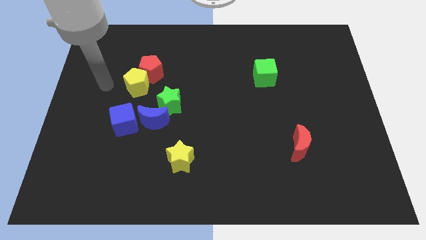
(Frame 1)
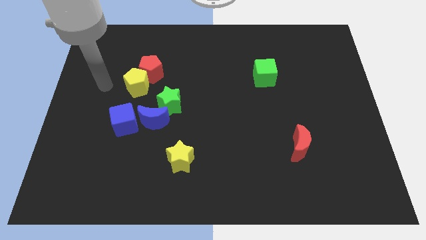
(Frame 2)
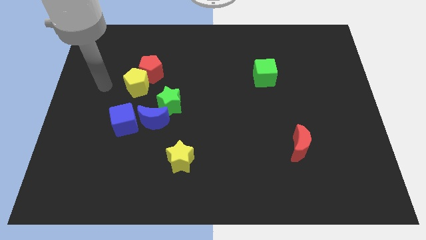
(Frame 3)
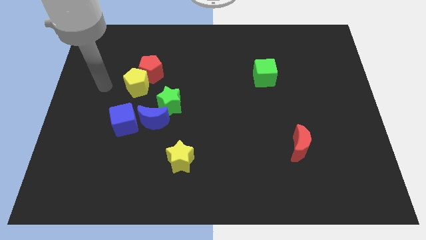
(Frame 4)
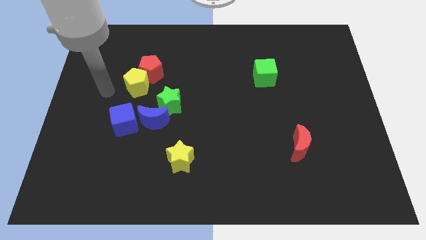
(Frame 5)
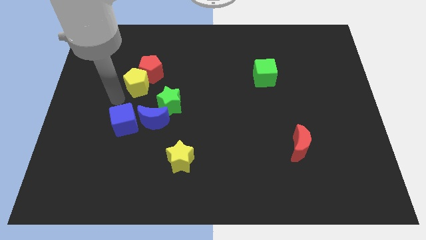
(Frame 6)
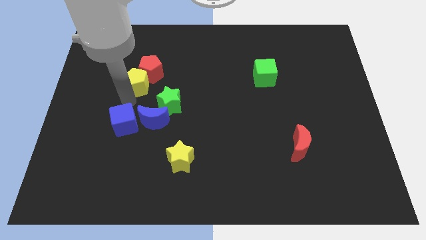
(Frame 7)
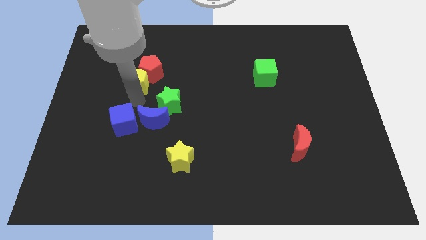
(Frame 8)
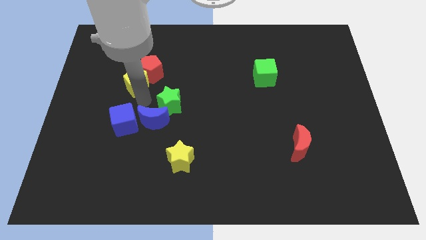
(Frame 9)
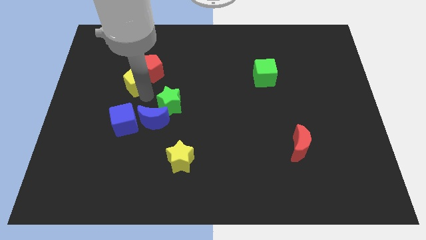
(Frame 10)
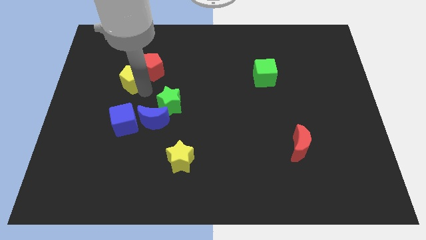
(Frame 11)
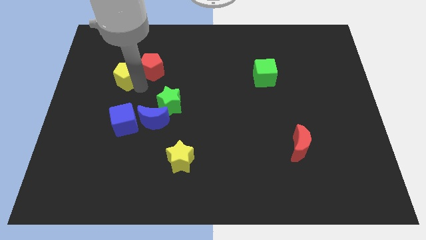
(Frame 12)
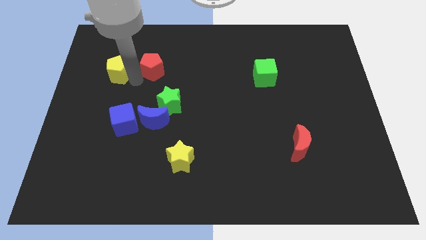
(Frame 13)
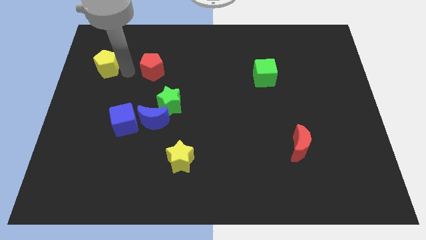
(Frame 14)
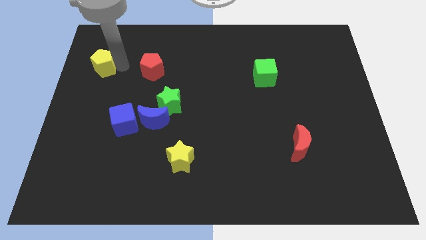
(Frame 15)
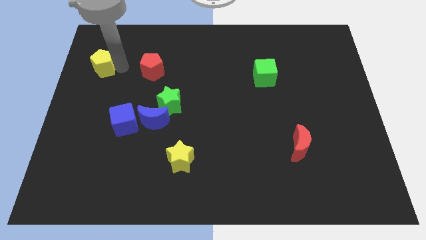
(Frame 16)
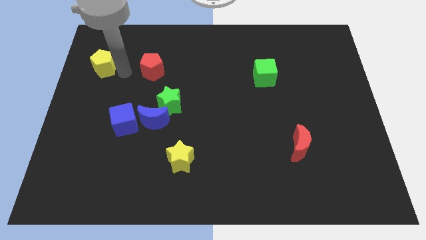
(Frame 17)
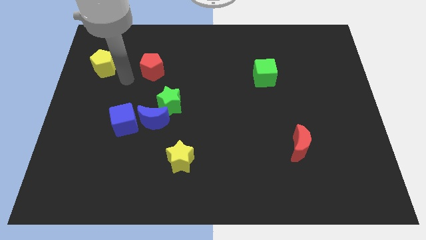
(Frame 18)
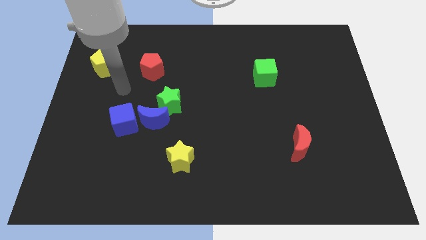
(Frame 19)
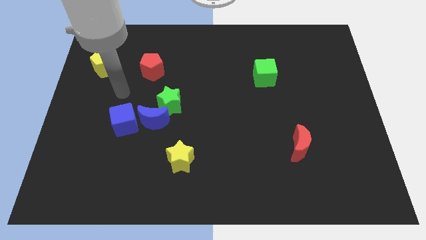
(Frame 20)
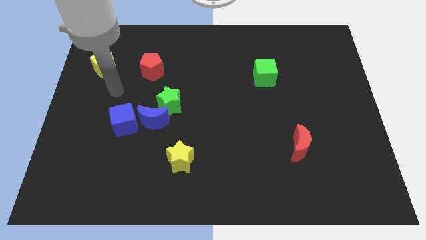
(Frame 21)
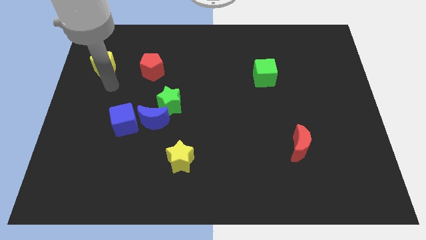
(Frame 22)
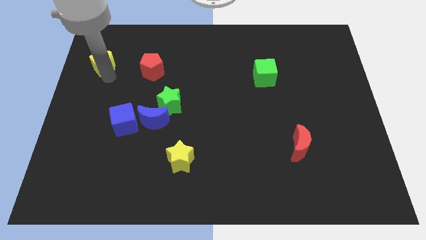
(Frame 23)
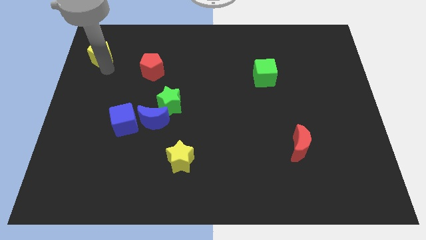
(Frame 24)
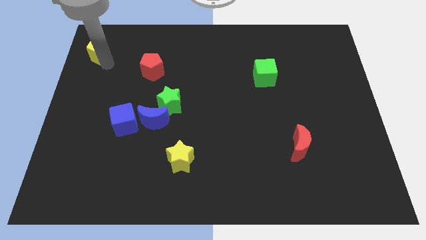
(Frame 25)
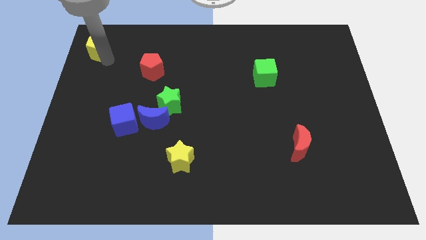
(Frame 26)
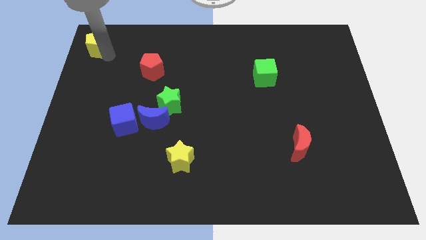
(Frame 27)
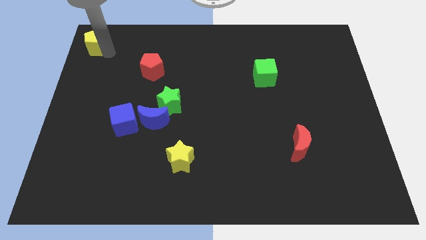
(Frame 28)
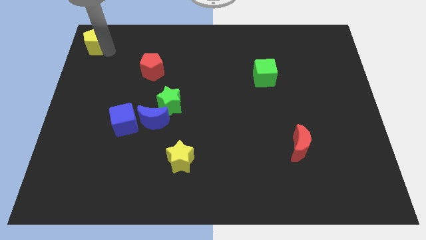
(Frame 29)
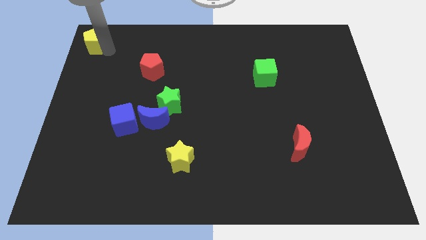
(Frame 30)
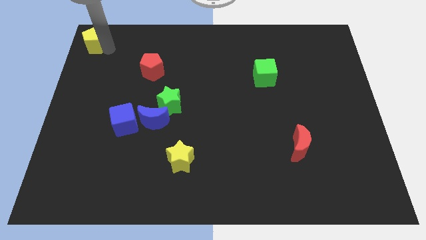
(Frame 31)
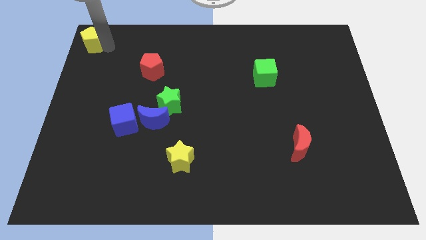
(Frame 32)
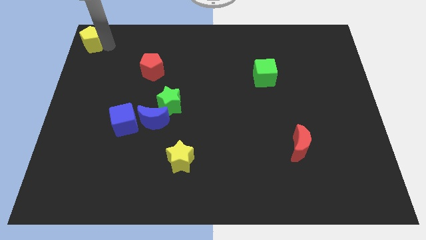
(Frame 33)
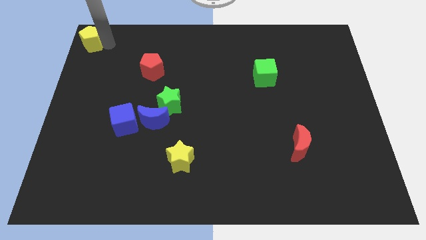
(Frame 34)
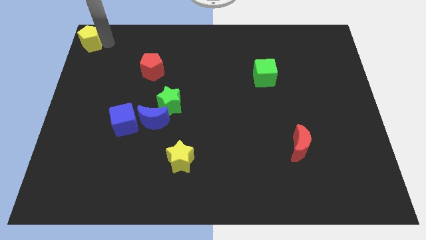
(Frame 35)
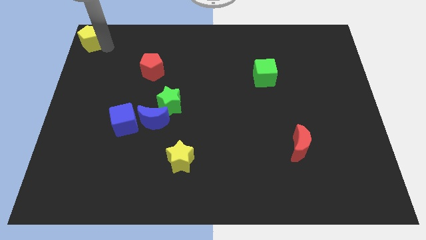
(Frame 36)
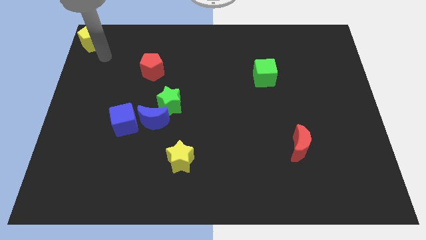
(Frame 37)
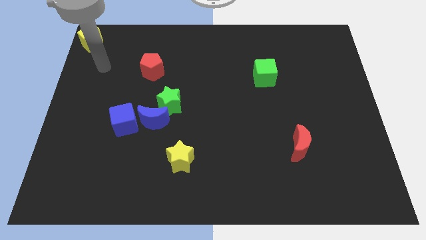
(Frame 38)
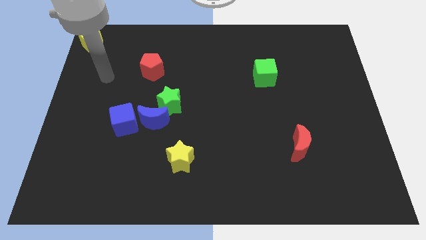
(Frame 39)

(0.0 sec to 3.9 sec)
place yellow pentagon to the top left corner of the board

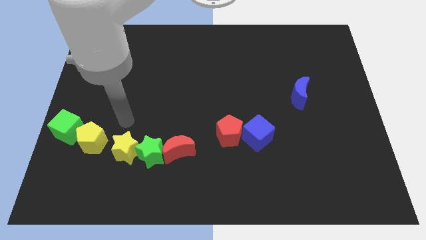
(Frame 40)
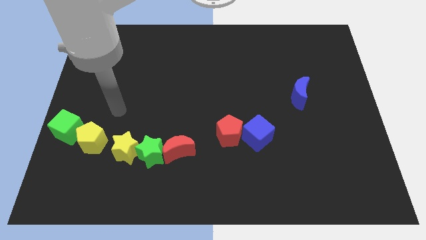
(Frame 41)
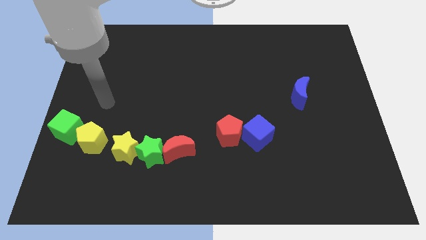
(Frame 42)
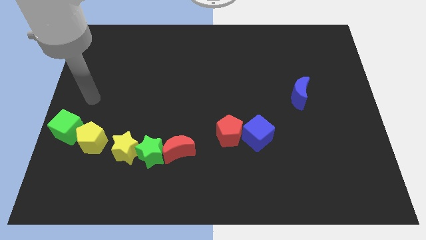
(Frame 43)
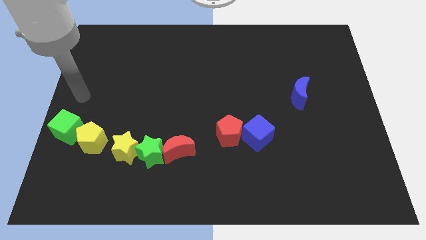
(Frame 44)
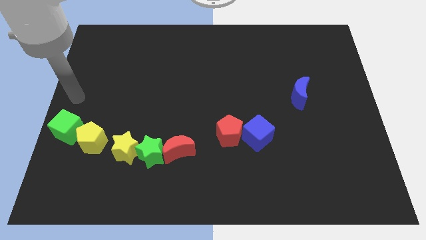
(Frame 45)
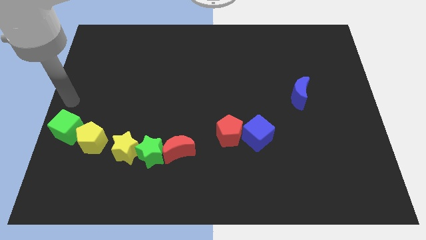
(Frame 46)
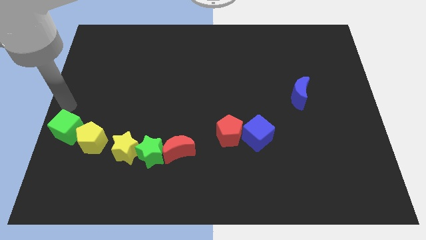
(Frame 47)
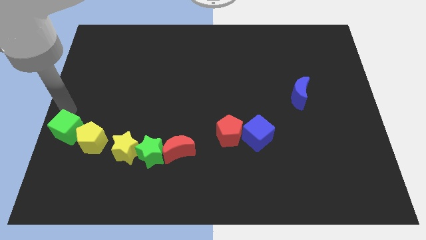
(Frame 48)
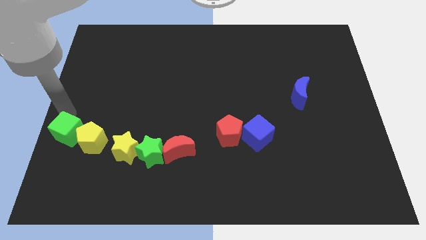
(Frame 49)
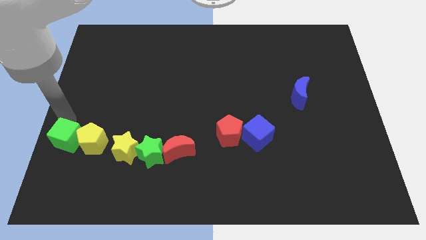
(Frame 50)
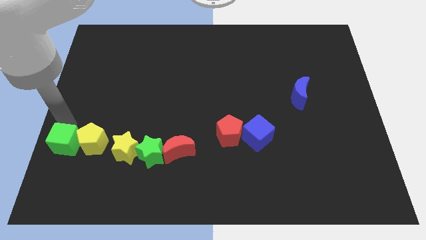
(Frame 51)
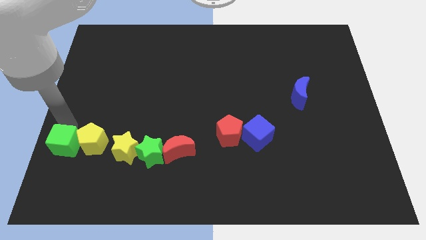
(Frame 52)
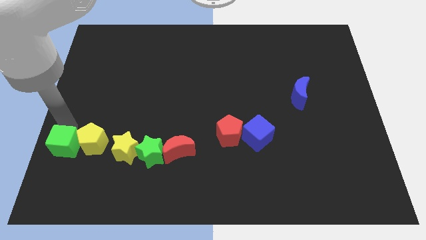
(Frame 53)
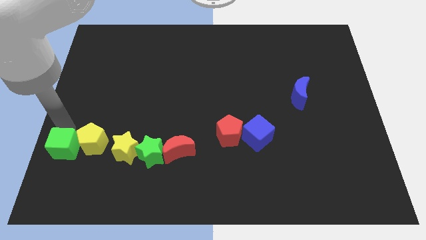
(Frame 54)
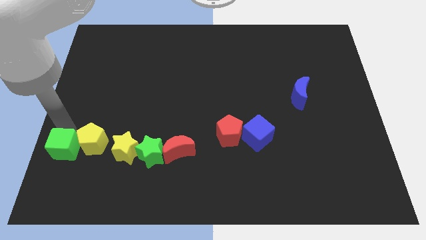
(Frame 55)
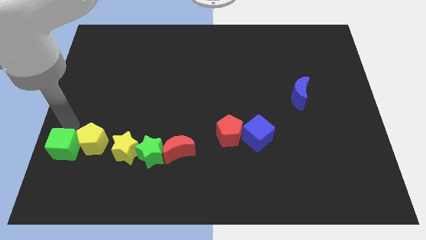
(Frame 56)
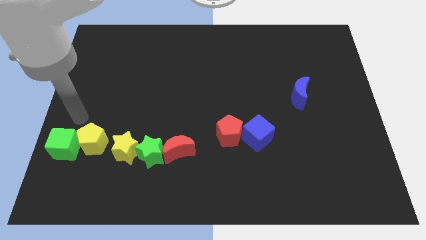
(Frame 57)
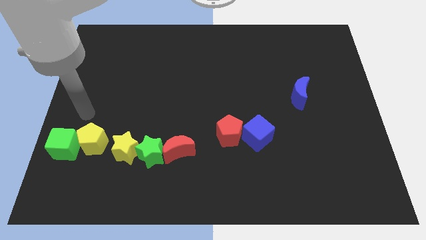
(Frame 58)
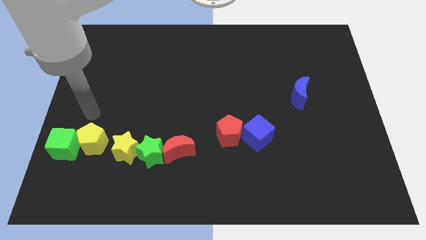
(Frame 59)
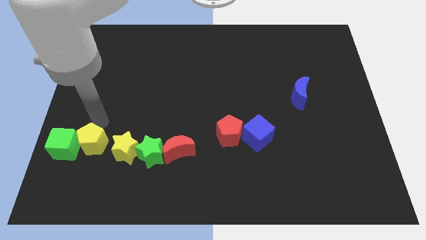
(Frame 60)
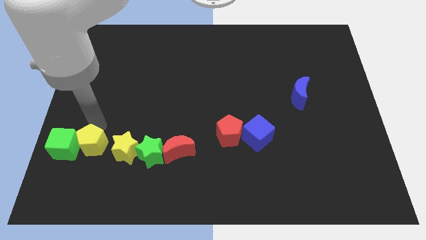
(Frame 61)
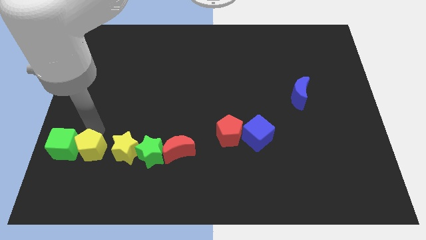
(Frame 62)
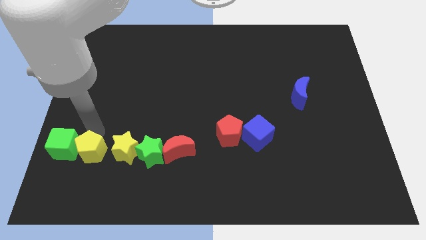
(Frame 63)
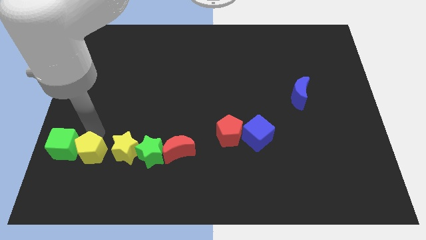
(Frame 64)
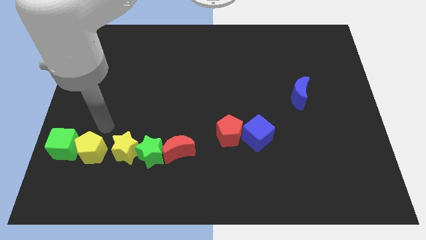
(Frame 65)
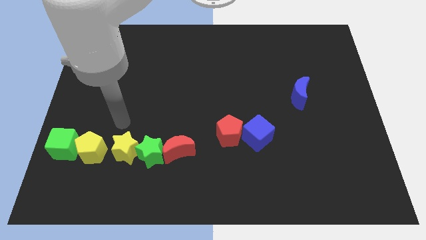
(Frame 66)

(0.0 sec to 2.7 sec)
push the green cube towards bottom

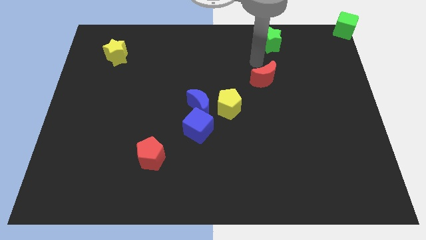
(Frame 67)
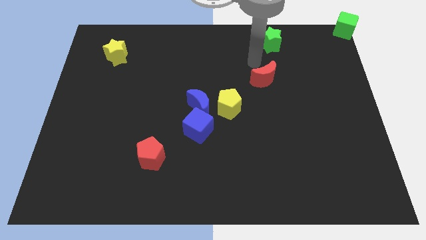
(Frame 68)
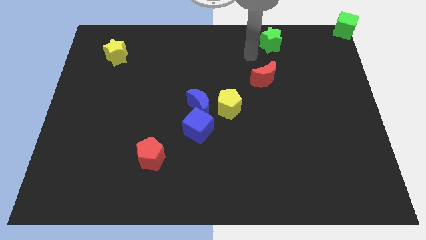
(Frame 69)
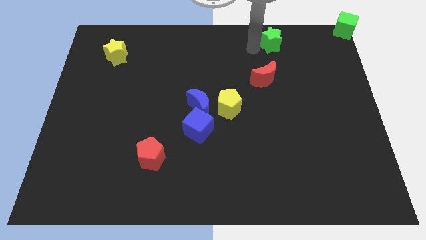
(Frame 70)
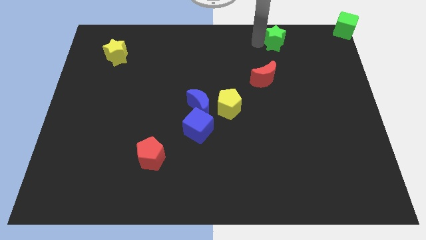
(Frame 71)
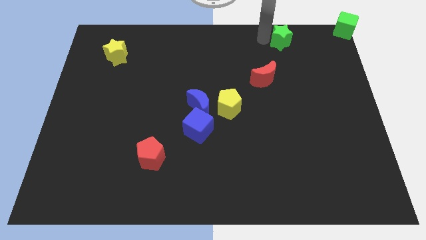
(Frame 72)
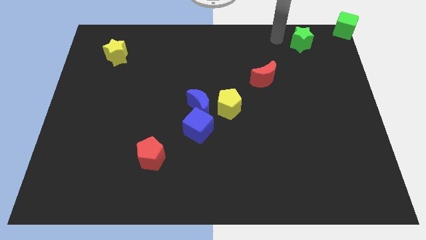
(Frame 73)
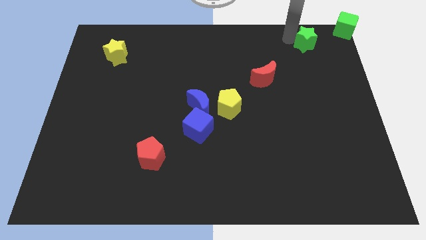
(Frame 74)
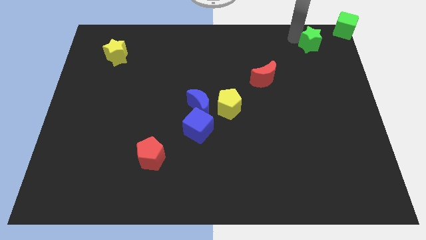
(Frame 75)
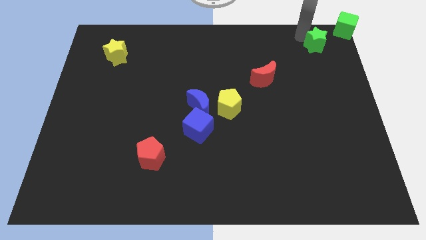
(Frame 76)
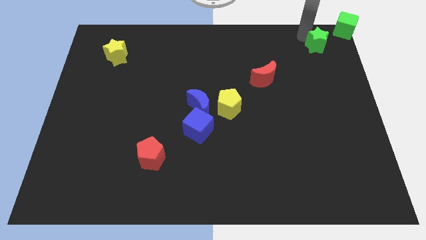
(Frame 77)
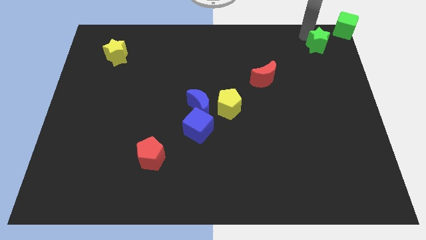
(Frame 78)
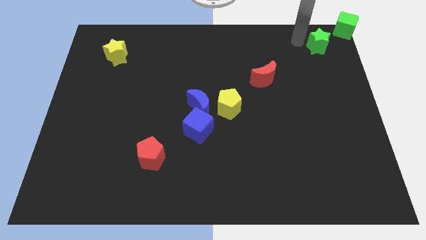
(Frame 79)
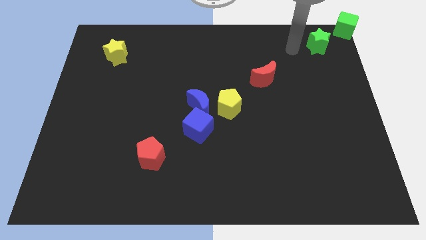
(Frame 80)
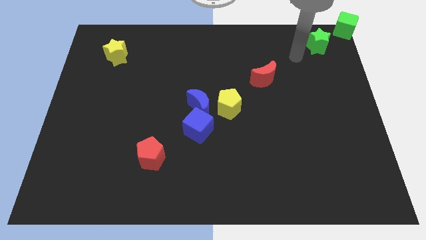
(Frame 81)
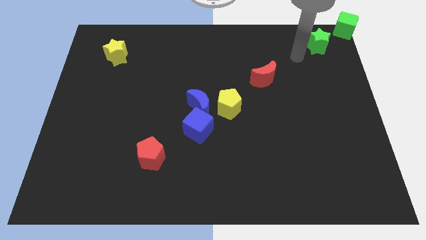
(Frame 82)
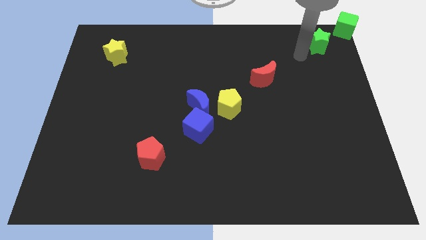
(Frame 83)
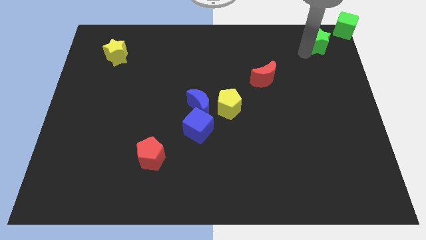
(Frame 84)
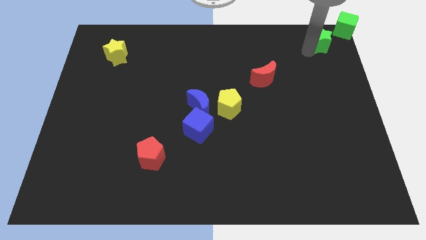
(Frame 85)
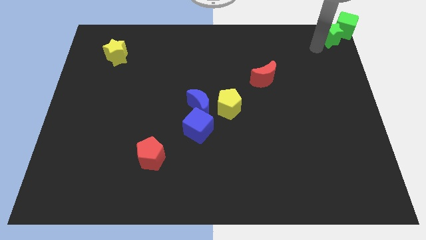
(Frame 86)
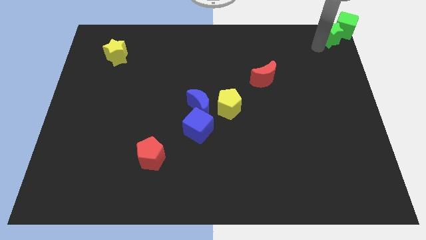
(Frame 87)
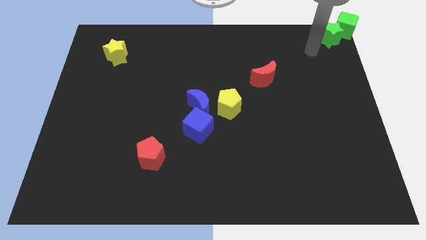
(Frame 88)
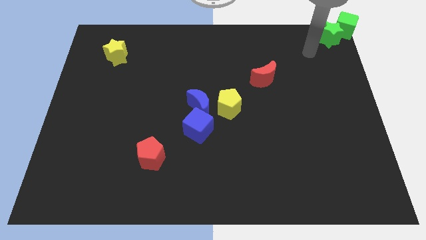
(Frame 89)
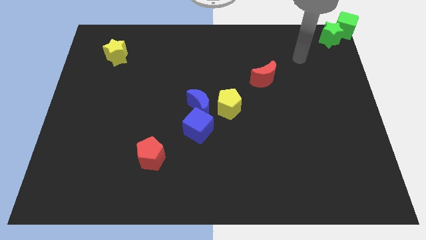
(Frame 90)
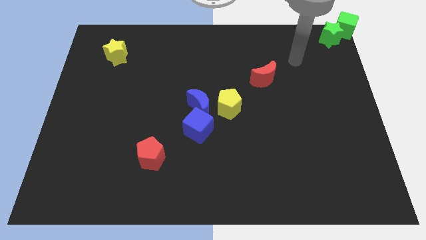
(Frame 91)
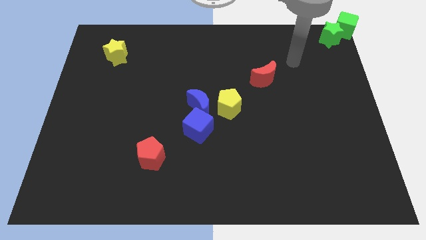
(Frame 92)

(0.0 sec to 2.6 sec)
push green star into green cube
